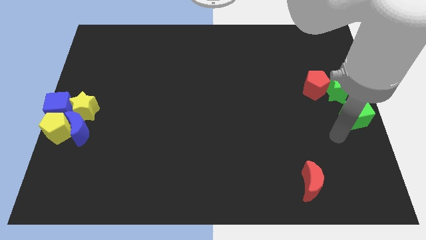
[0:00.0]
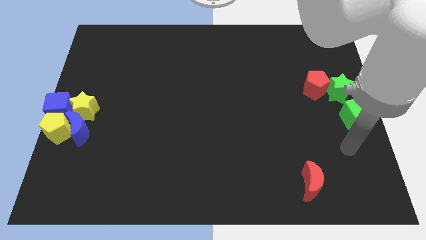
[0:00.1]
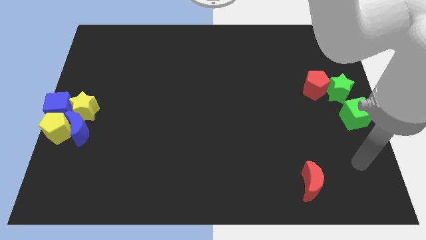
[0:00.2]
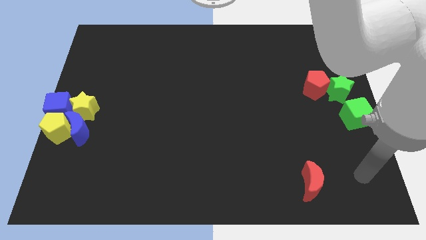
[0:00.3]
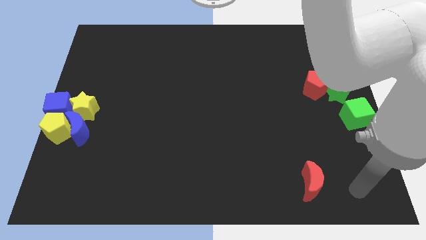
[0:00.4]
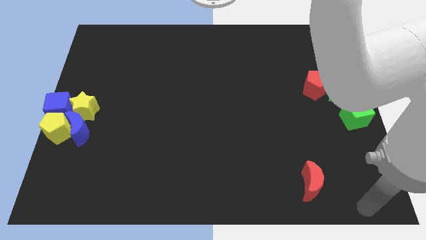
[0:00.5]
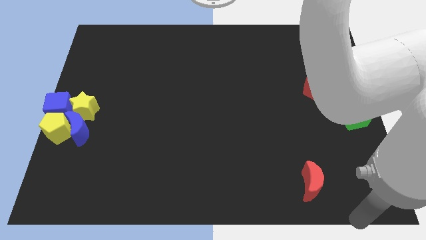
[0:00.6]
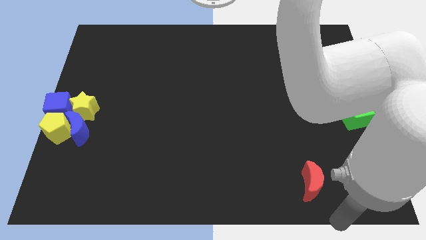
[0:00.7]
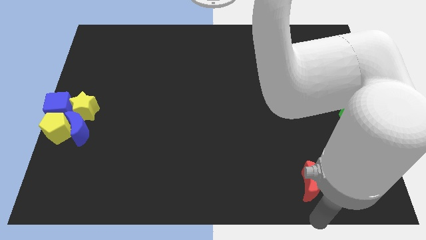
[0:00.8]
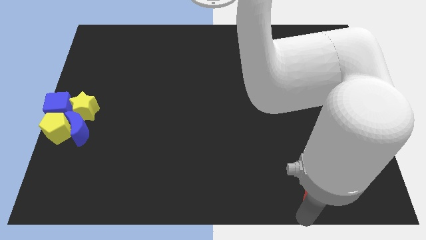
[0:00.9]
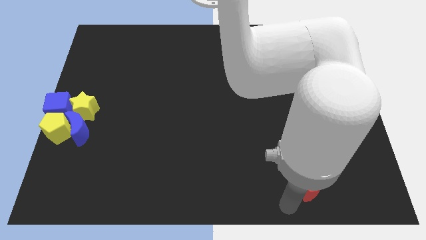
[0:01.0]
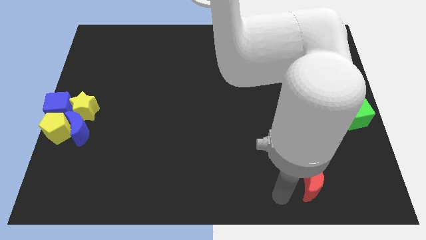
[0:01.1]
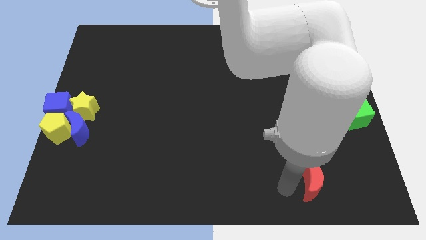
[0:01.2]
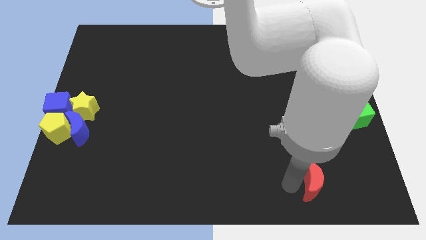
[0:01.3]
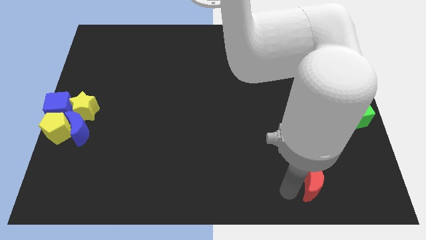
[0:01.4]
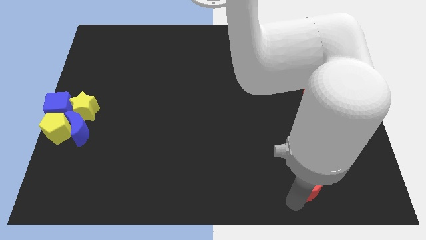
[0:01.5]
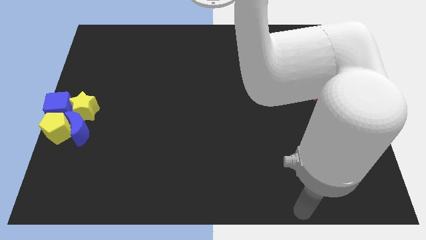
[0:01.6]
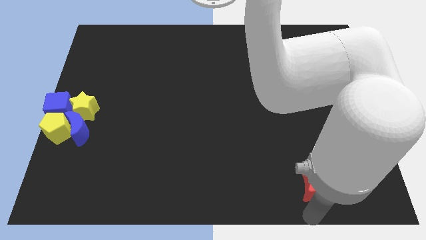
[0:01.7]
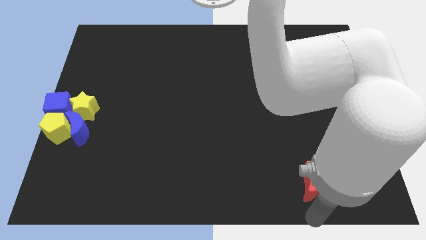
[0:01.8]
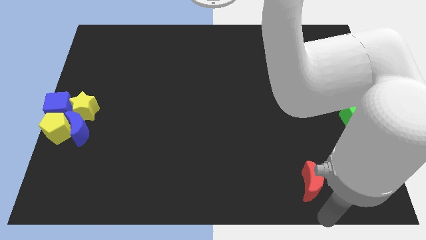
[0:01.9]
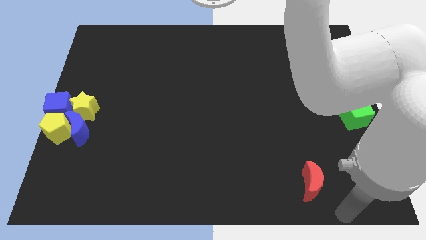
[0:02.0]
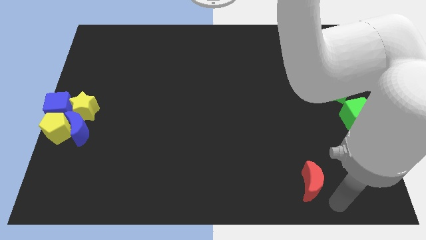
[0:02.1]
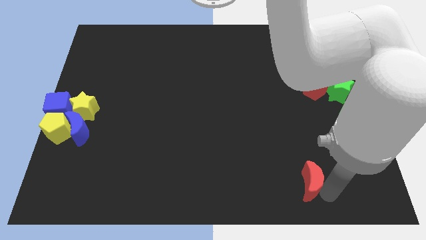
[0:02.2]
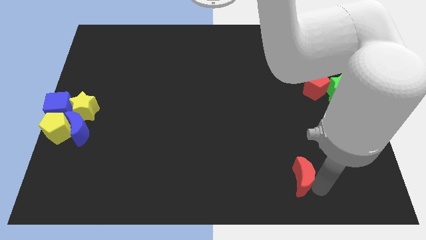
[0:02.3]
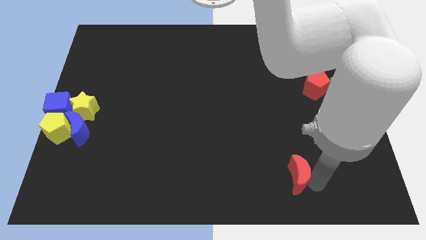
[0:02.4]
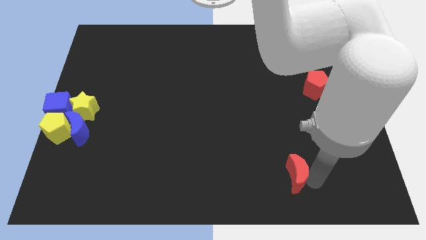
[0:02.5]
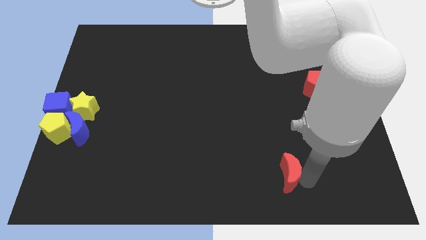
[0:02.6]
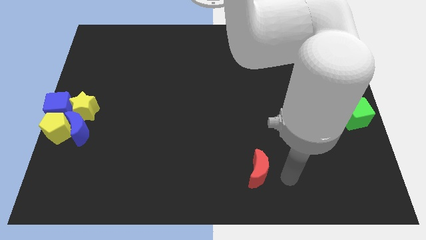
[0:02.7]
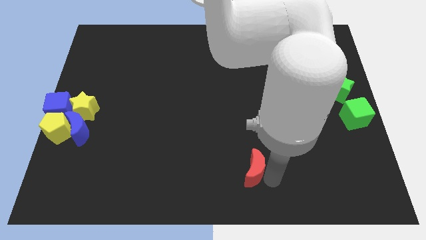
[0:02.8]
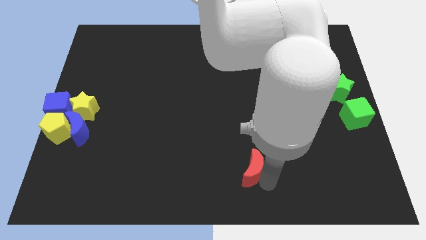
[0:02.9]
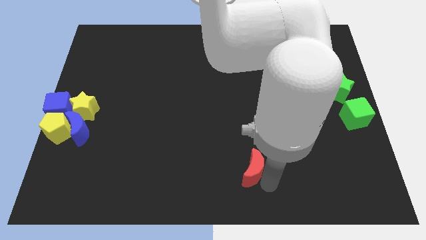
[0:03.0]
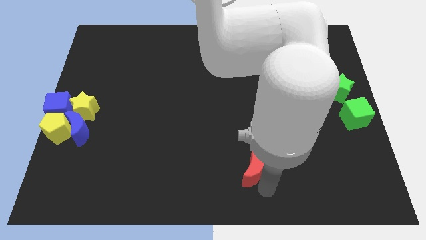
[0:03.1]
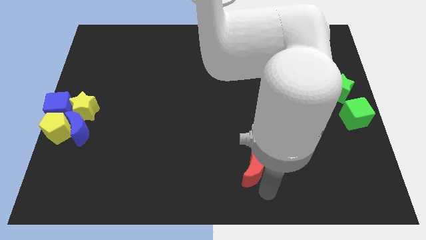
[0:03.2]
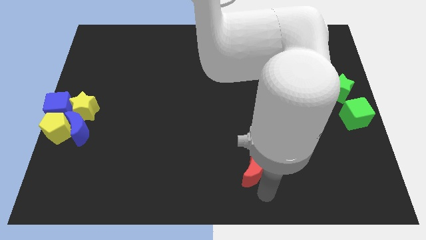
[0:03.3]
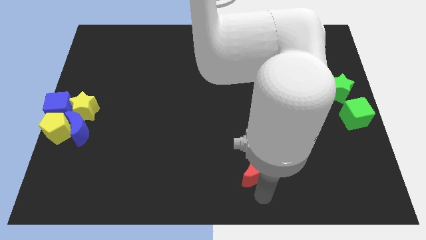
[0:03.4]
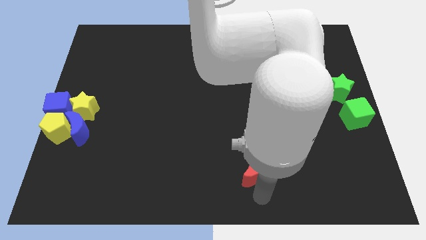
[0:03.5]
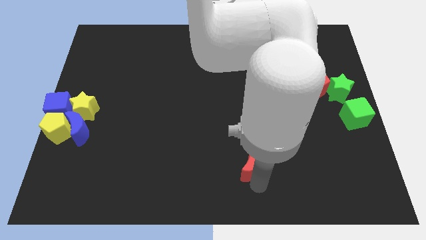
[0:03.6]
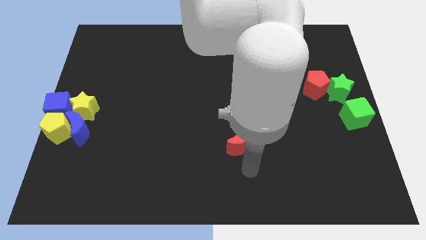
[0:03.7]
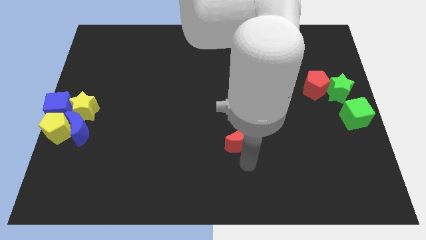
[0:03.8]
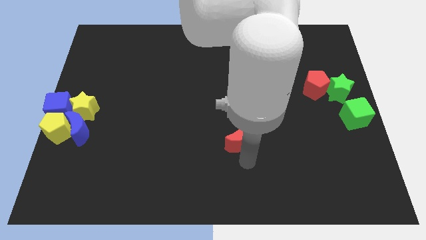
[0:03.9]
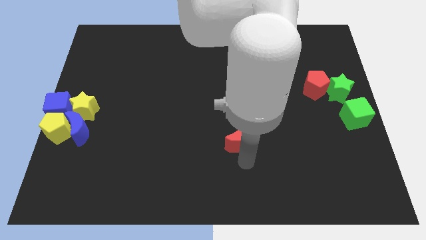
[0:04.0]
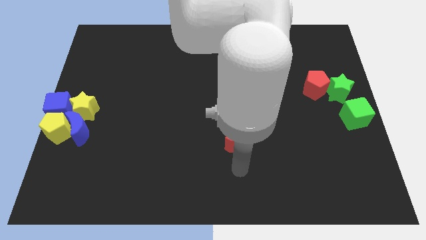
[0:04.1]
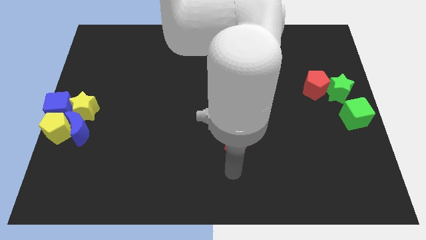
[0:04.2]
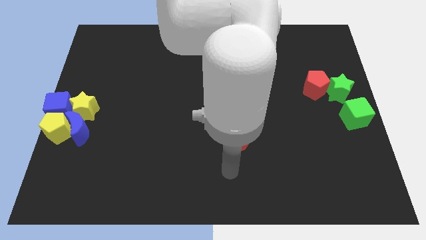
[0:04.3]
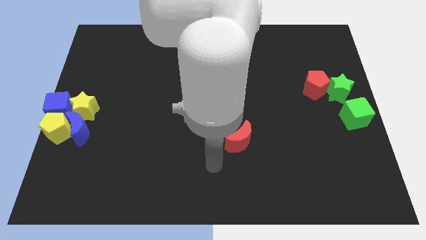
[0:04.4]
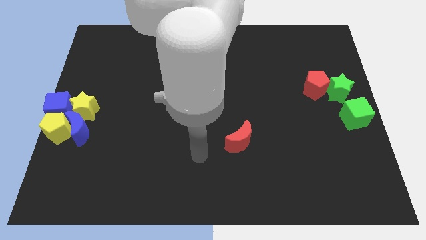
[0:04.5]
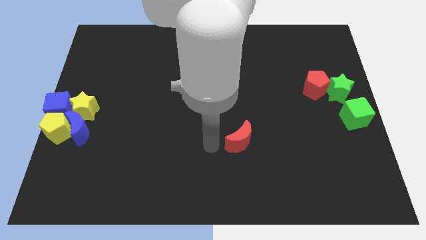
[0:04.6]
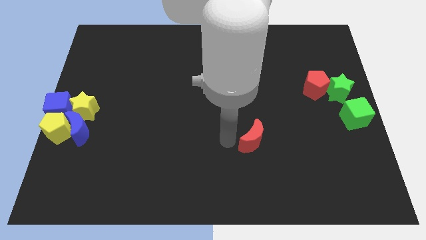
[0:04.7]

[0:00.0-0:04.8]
move the red crescent slightly towards the center of the board

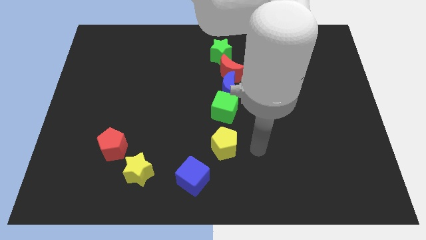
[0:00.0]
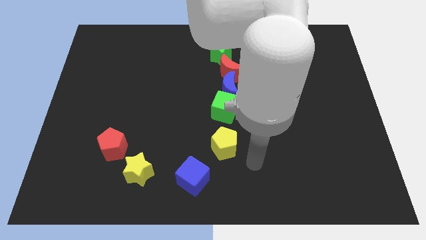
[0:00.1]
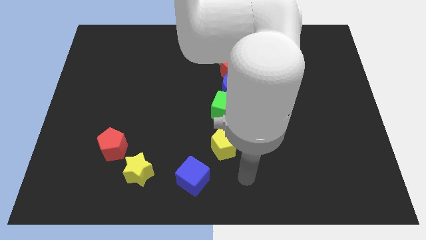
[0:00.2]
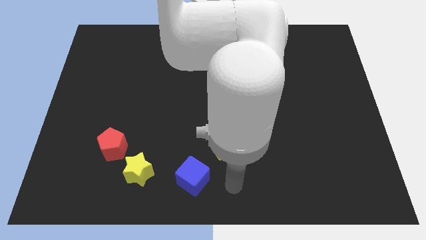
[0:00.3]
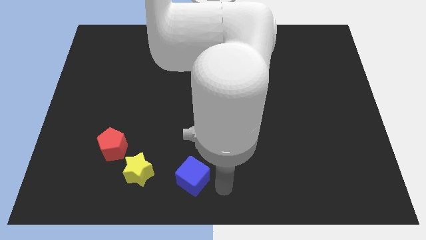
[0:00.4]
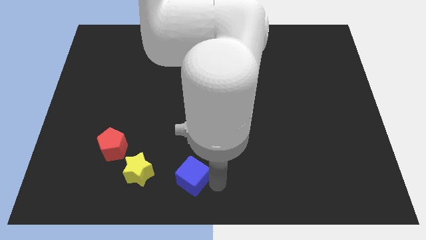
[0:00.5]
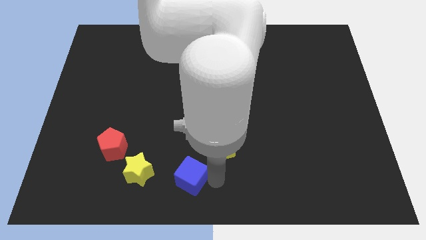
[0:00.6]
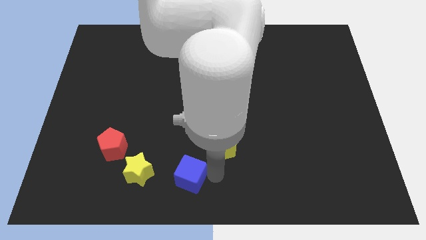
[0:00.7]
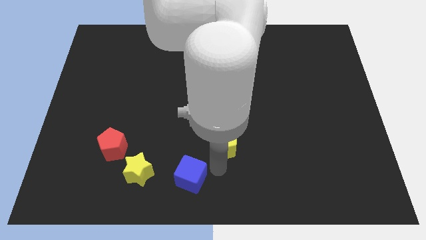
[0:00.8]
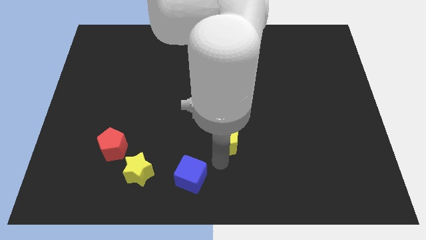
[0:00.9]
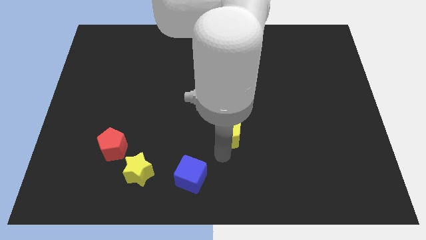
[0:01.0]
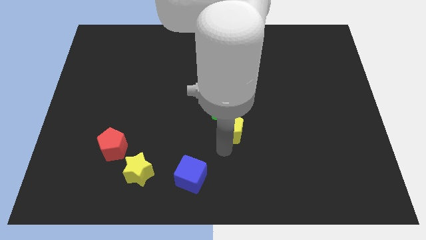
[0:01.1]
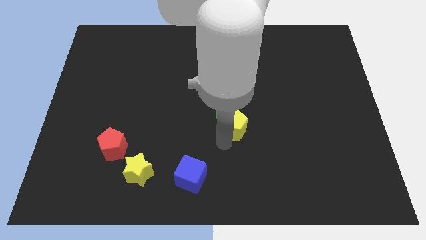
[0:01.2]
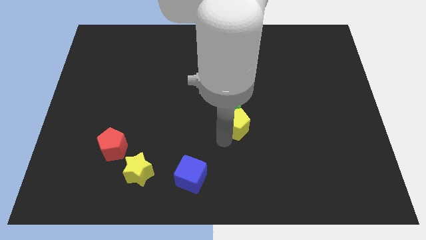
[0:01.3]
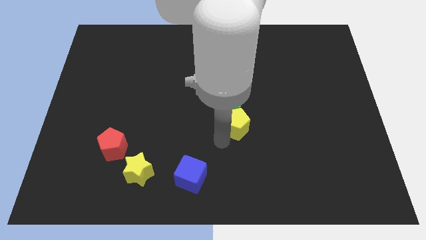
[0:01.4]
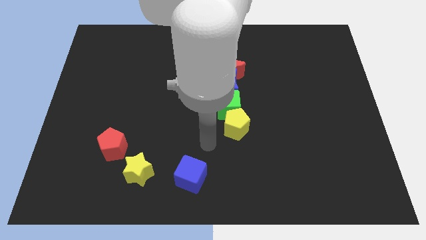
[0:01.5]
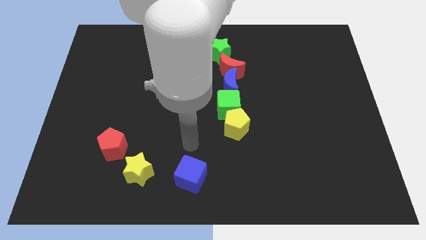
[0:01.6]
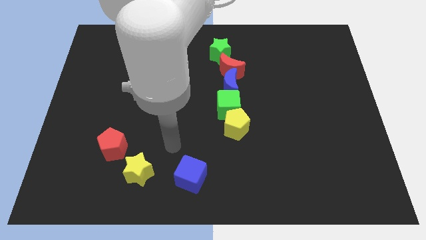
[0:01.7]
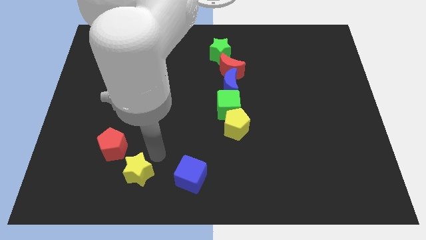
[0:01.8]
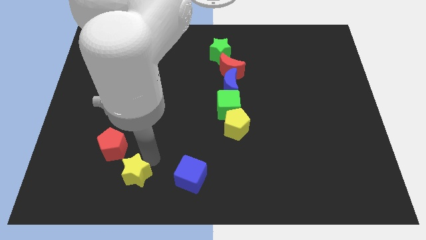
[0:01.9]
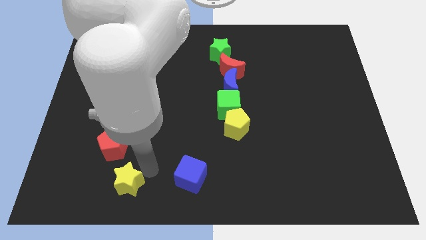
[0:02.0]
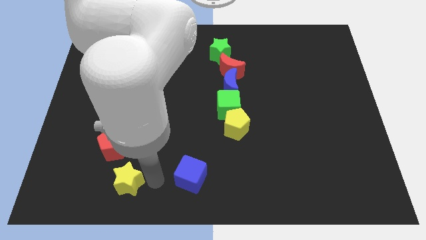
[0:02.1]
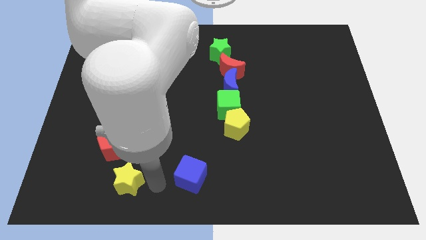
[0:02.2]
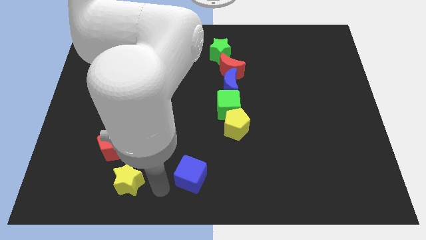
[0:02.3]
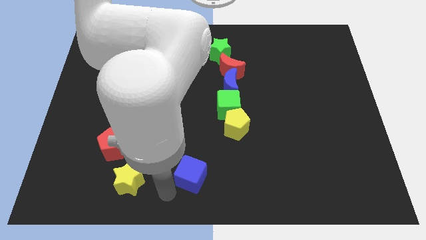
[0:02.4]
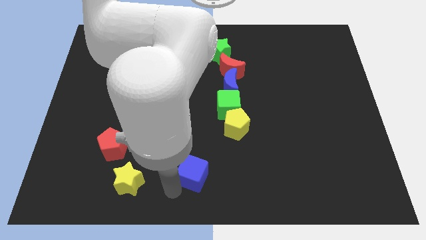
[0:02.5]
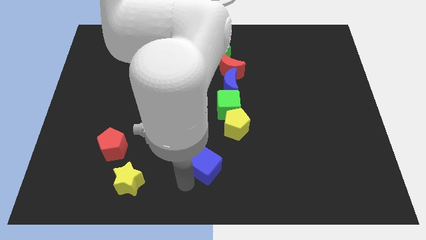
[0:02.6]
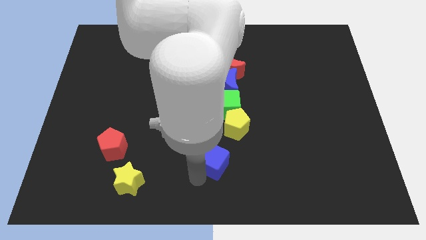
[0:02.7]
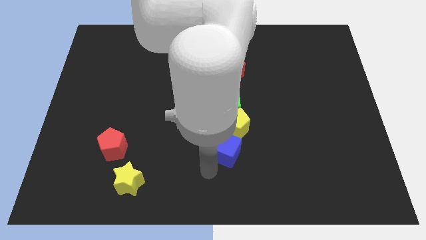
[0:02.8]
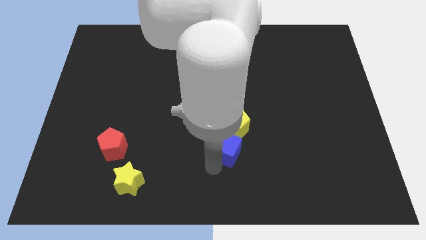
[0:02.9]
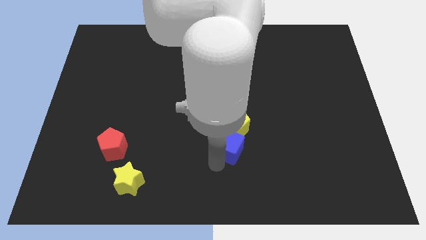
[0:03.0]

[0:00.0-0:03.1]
place the blue cube below the yellow pentagon

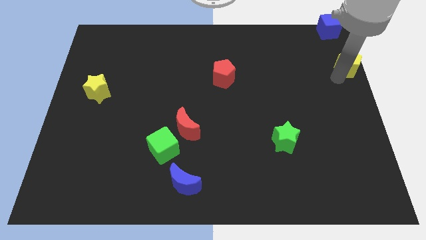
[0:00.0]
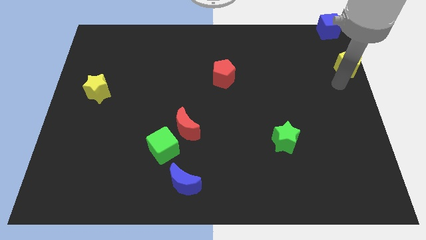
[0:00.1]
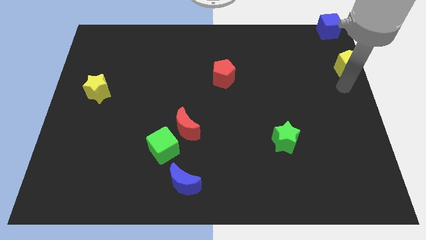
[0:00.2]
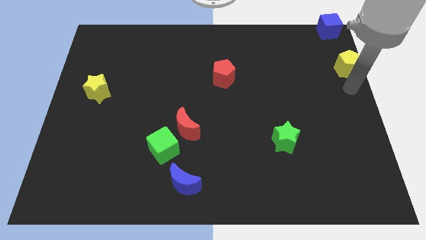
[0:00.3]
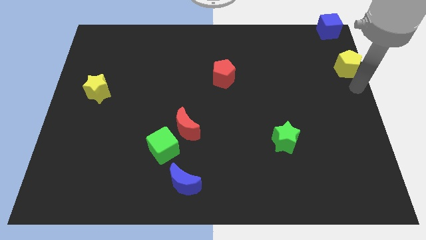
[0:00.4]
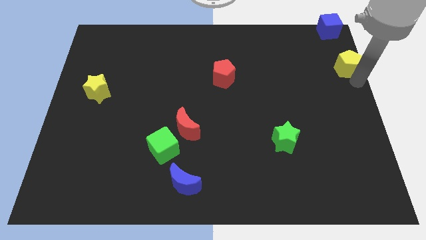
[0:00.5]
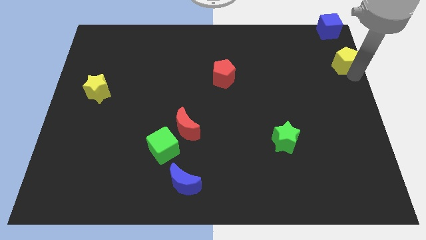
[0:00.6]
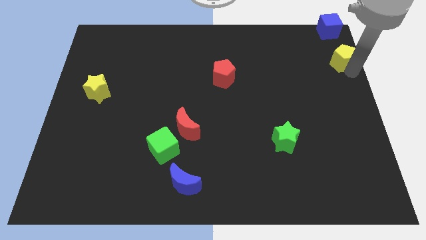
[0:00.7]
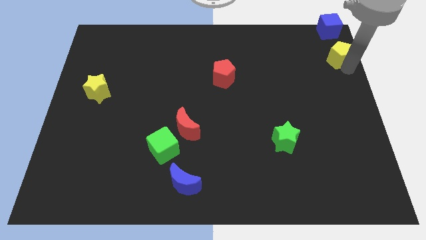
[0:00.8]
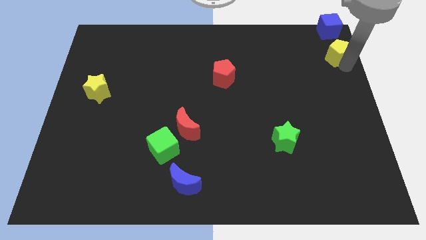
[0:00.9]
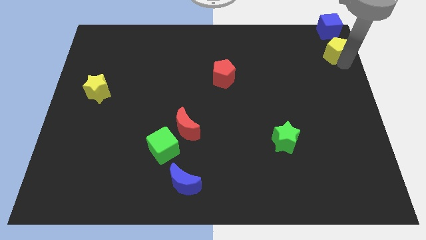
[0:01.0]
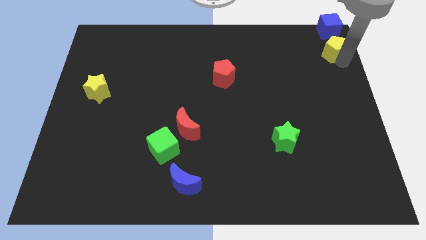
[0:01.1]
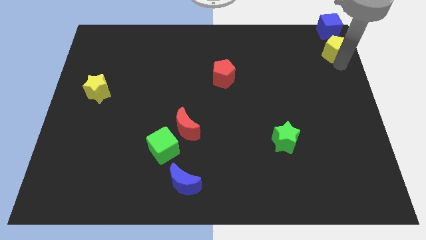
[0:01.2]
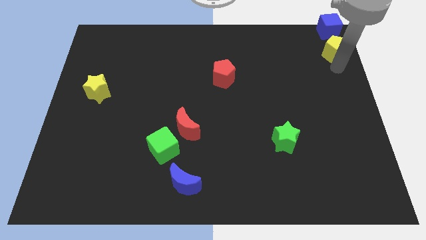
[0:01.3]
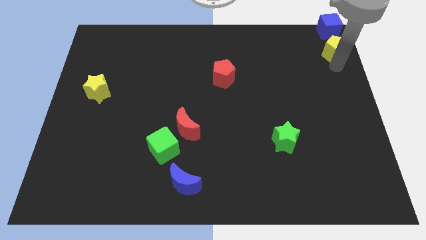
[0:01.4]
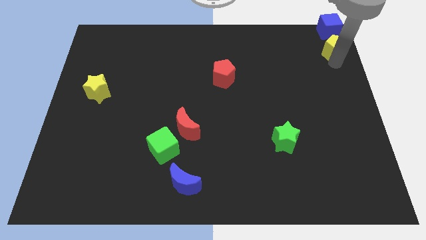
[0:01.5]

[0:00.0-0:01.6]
move the yellow pentagon towards the blue cube
